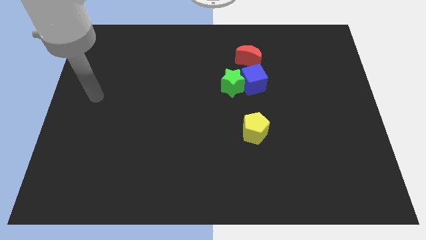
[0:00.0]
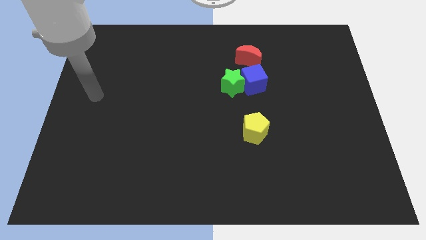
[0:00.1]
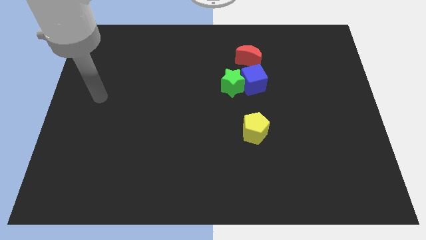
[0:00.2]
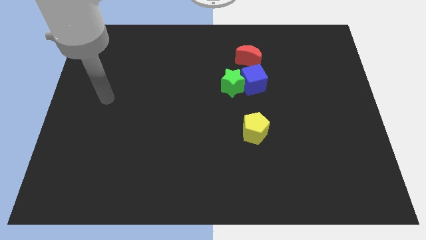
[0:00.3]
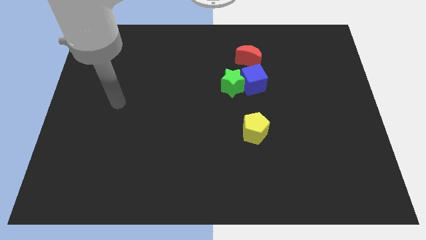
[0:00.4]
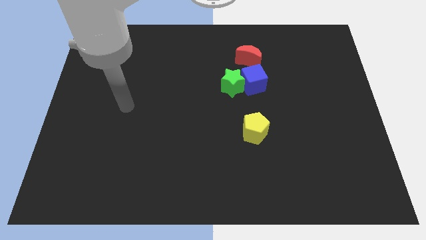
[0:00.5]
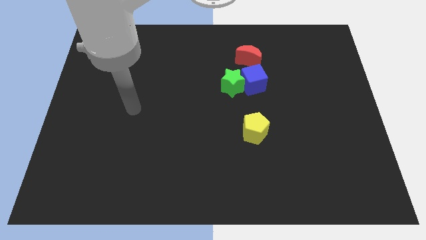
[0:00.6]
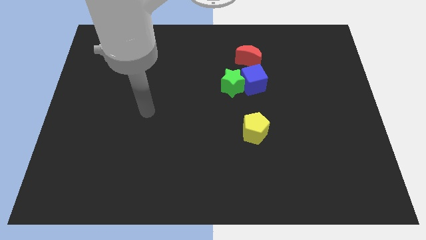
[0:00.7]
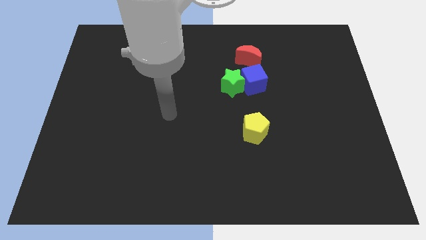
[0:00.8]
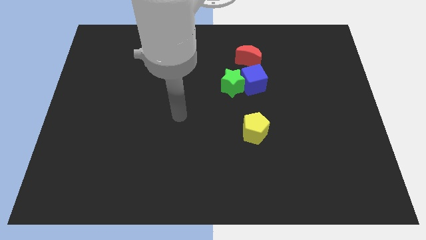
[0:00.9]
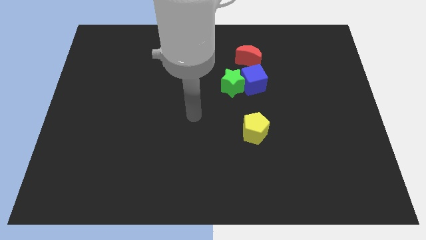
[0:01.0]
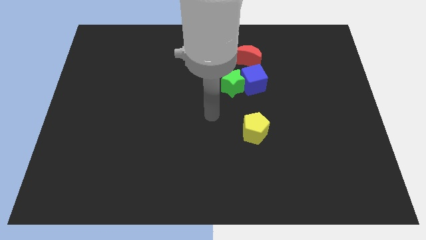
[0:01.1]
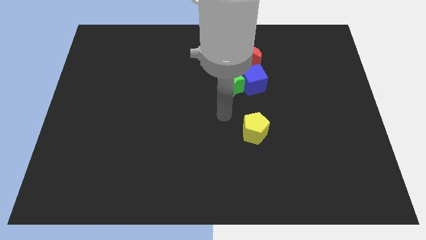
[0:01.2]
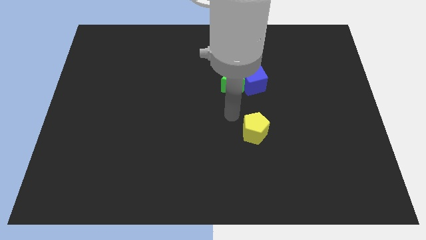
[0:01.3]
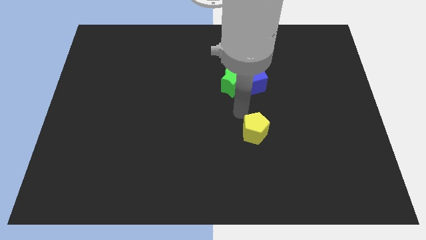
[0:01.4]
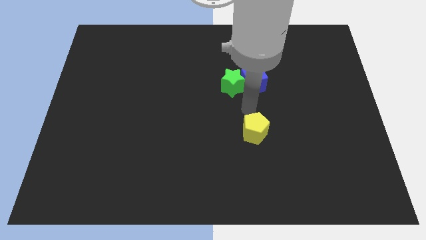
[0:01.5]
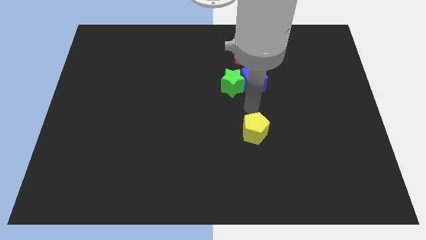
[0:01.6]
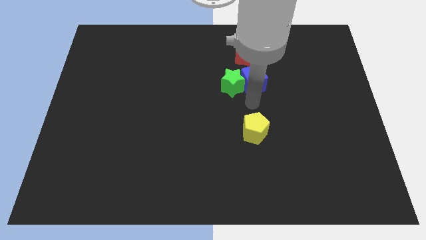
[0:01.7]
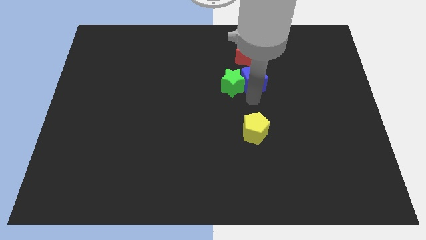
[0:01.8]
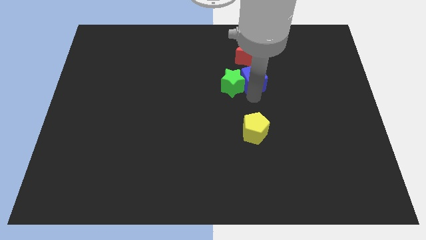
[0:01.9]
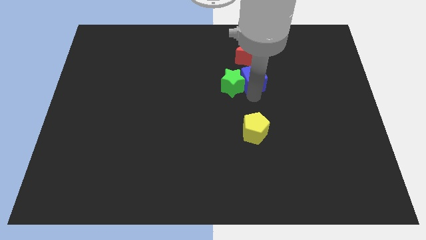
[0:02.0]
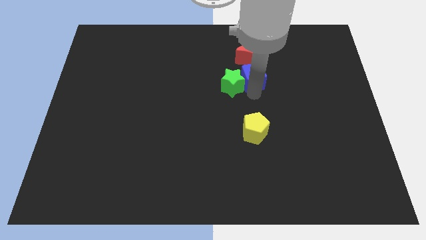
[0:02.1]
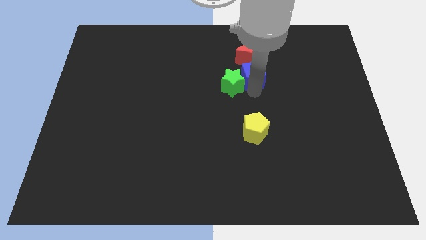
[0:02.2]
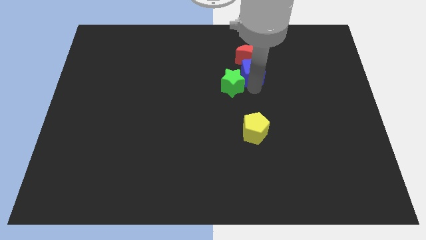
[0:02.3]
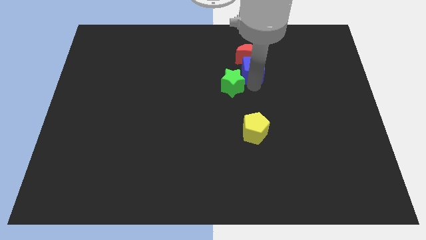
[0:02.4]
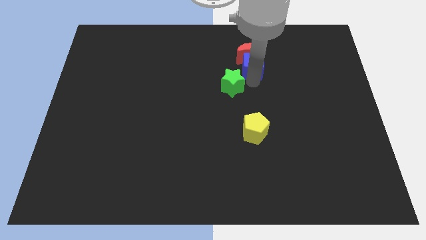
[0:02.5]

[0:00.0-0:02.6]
move the blue cube close to the red moon

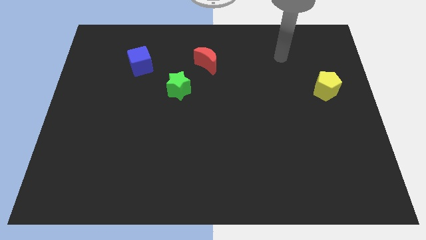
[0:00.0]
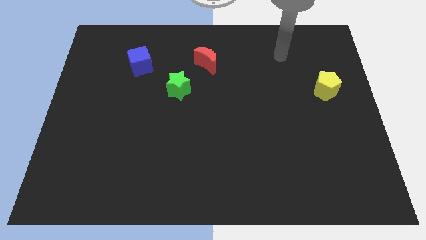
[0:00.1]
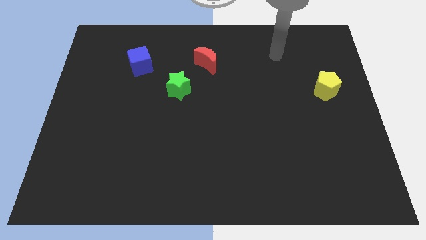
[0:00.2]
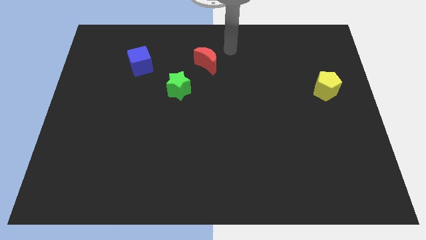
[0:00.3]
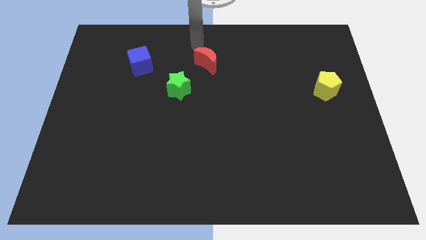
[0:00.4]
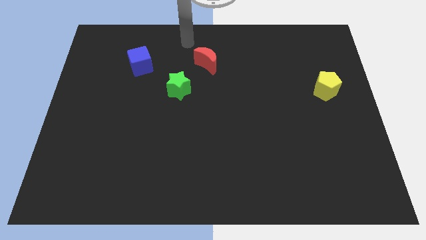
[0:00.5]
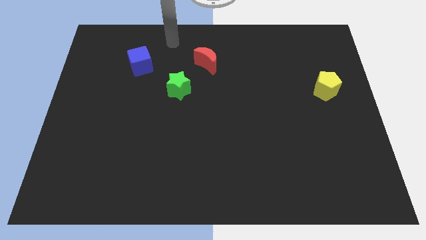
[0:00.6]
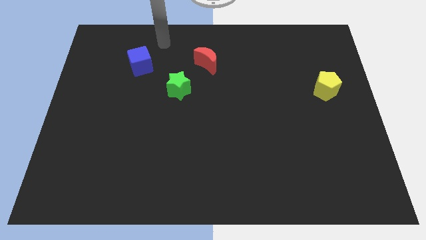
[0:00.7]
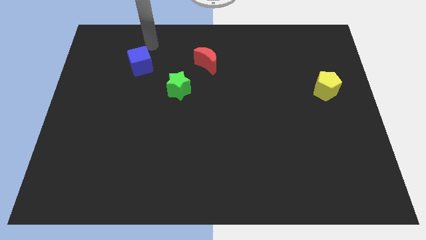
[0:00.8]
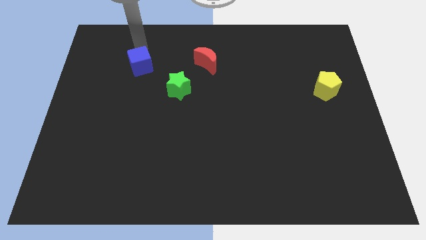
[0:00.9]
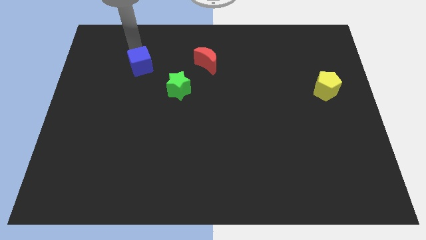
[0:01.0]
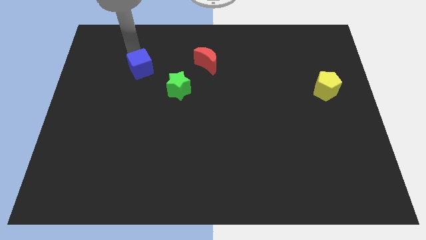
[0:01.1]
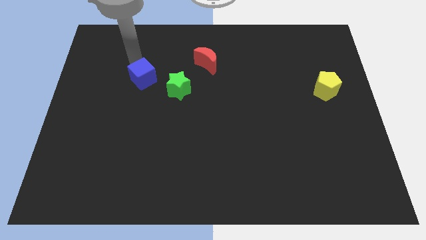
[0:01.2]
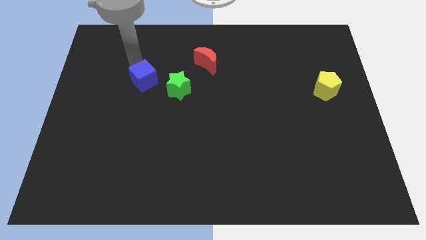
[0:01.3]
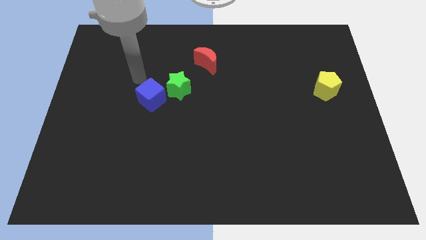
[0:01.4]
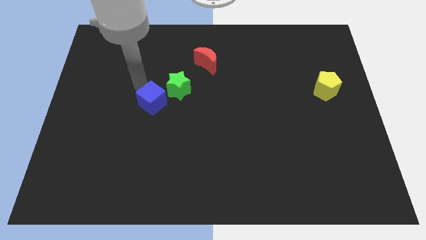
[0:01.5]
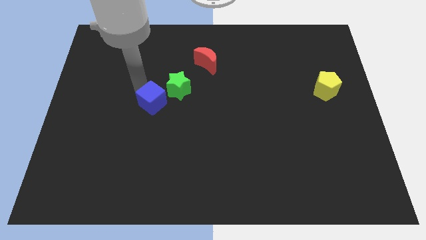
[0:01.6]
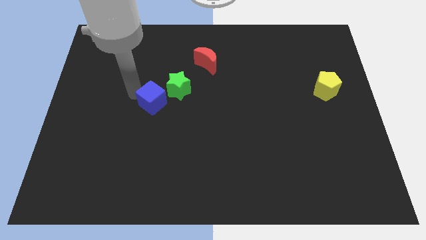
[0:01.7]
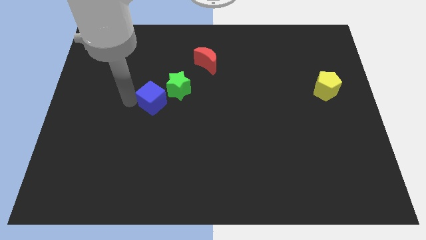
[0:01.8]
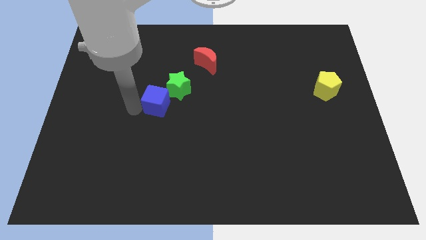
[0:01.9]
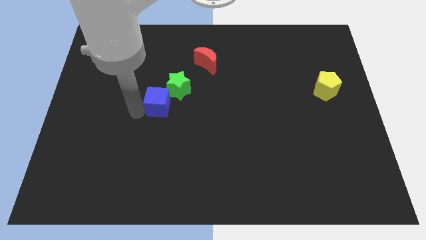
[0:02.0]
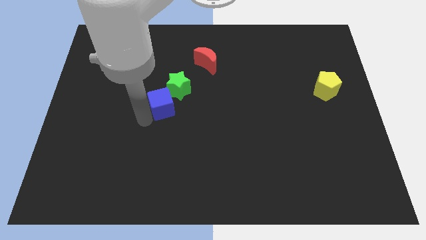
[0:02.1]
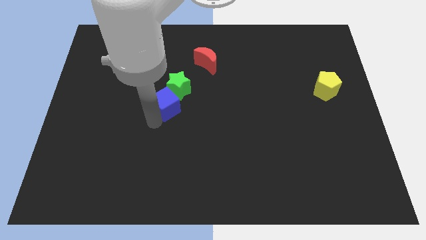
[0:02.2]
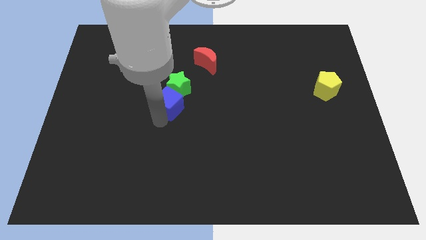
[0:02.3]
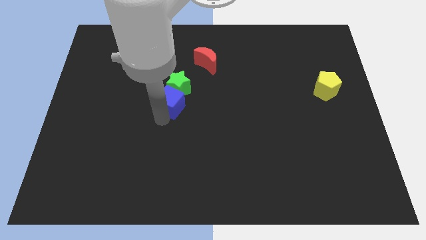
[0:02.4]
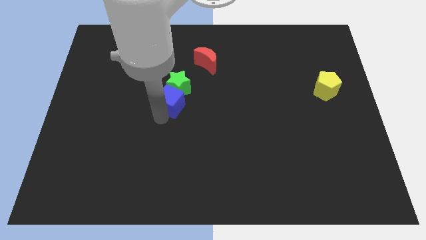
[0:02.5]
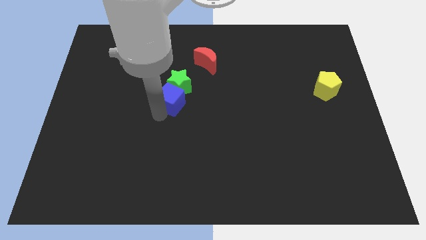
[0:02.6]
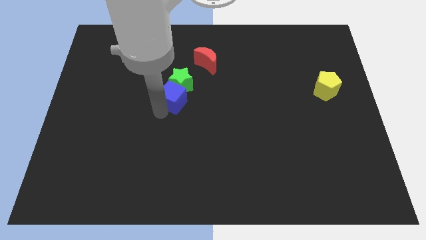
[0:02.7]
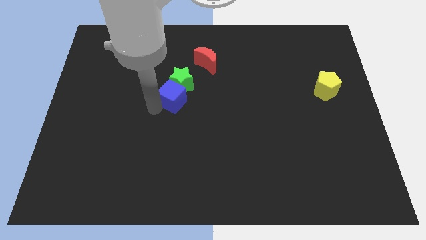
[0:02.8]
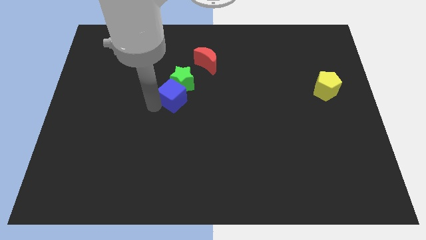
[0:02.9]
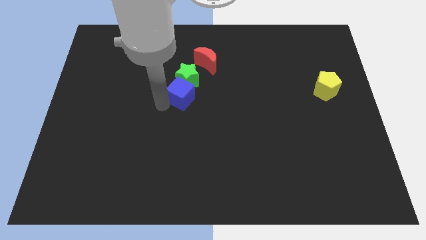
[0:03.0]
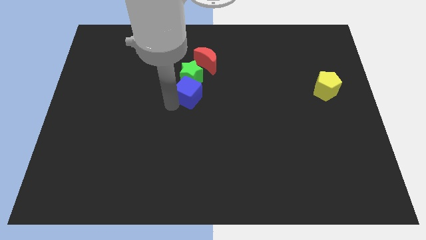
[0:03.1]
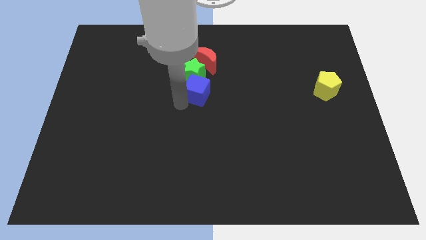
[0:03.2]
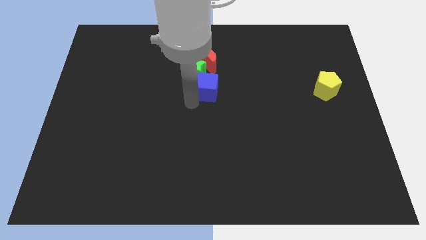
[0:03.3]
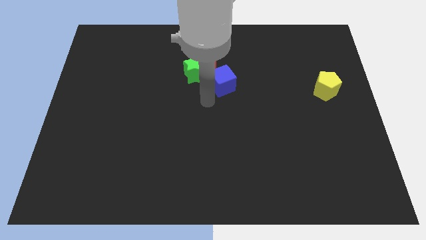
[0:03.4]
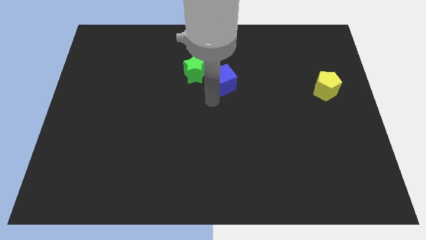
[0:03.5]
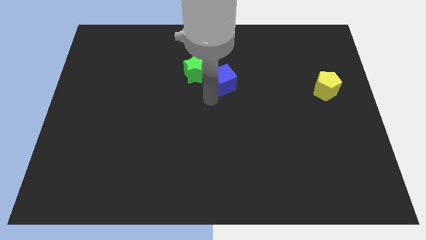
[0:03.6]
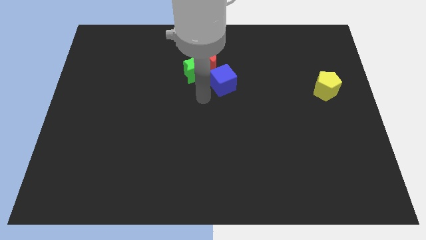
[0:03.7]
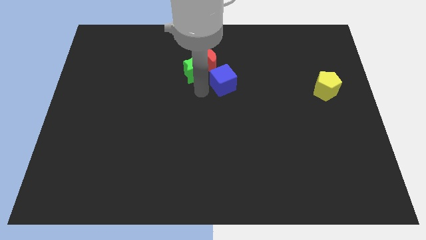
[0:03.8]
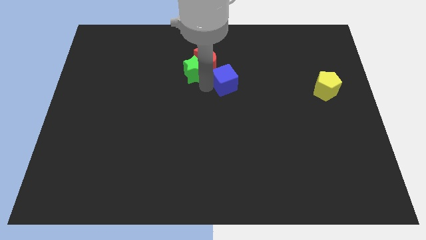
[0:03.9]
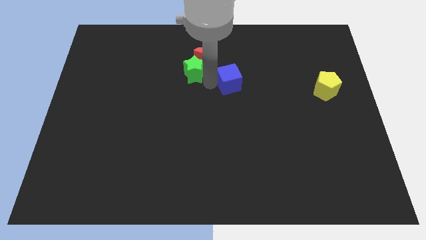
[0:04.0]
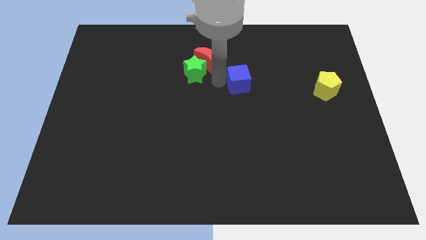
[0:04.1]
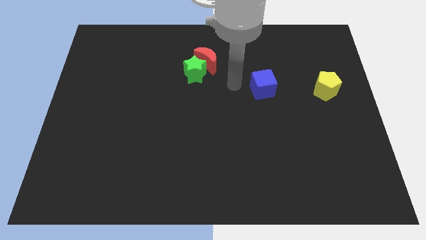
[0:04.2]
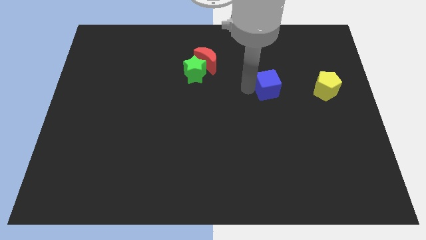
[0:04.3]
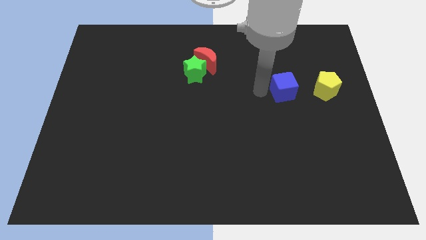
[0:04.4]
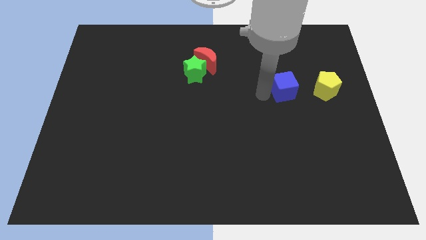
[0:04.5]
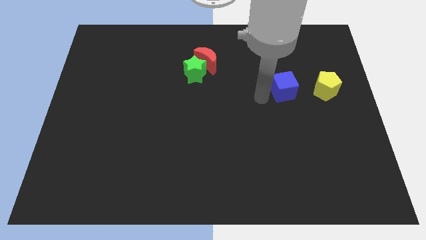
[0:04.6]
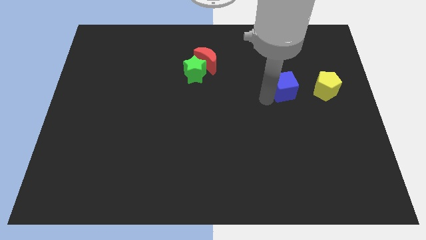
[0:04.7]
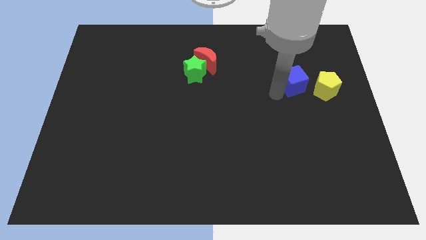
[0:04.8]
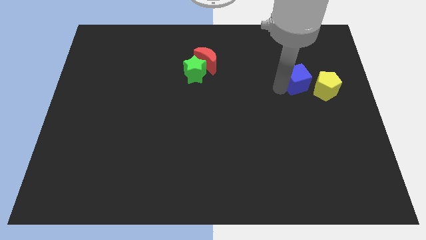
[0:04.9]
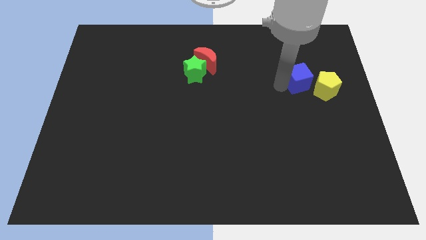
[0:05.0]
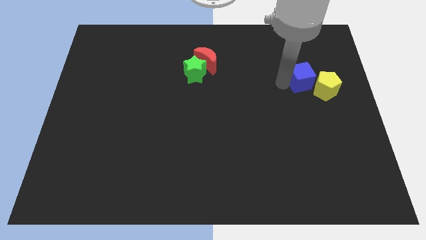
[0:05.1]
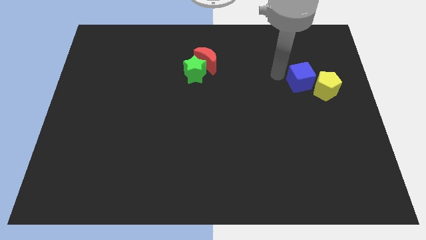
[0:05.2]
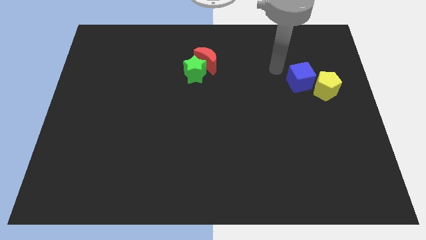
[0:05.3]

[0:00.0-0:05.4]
push the blue block towards the pentagon

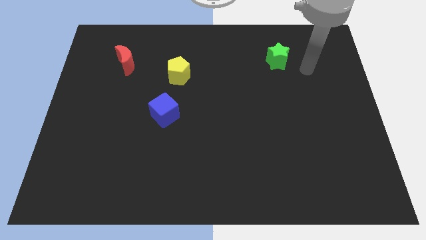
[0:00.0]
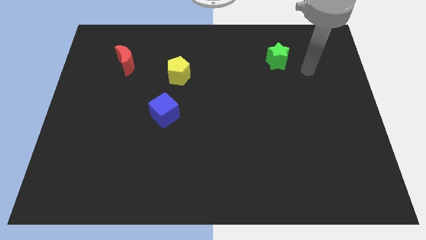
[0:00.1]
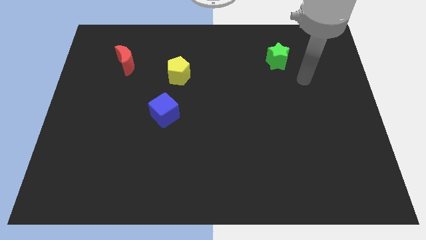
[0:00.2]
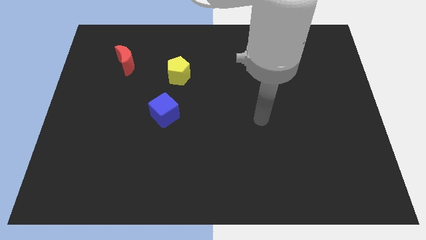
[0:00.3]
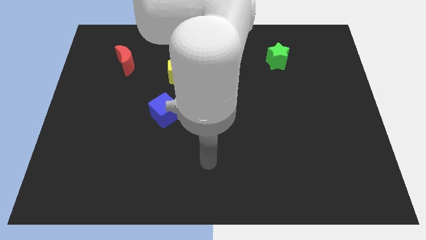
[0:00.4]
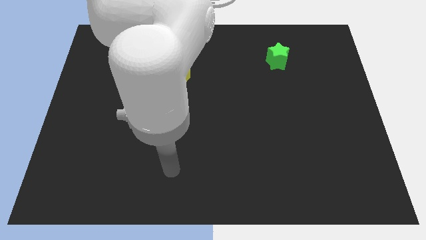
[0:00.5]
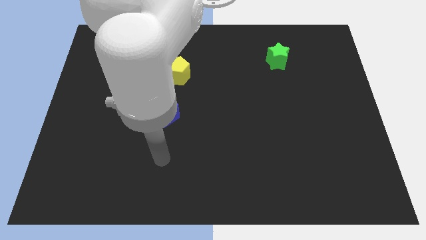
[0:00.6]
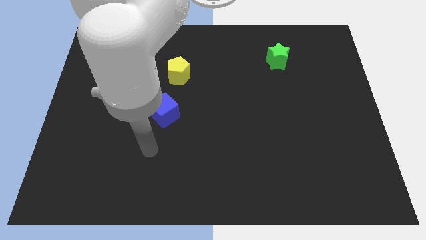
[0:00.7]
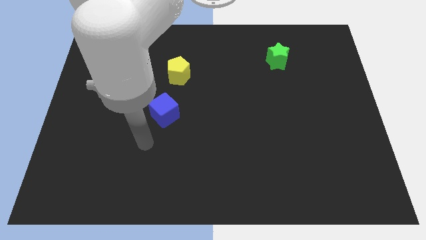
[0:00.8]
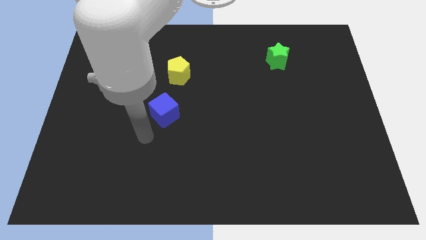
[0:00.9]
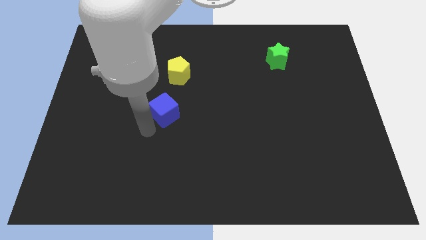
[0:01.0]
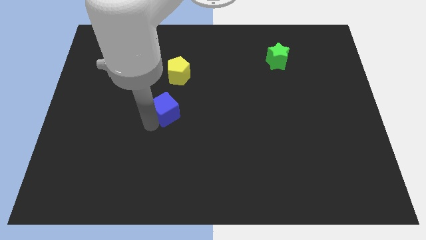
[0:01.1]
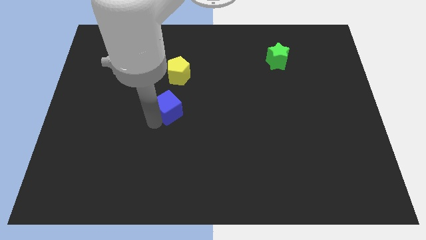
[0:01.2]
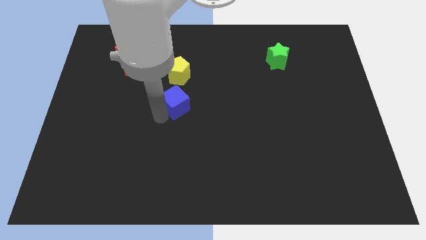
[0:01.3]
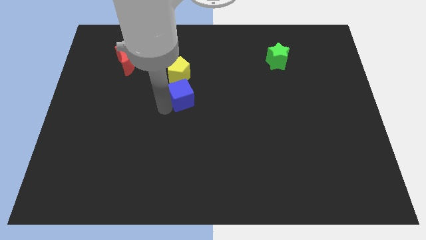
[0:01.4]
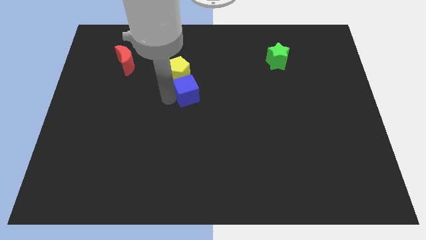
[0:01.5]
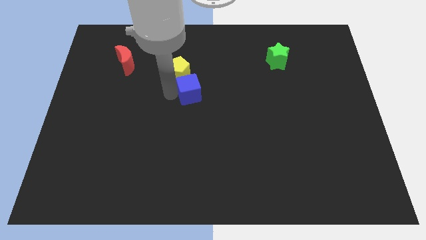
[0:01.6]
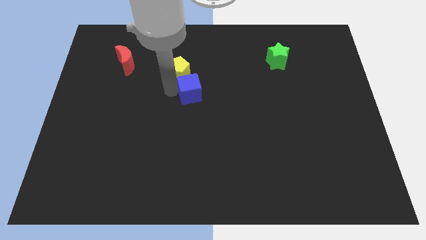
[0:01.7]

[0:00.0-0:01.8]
slide the blue cube next to the pentagon
